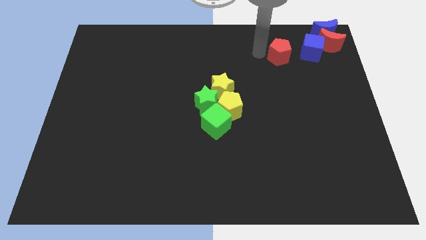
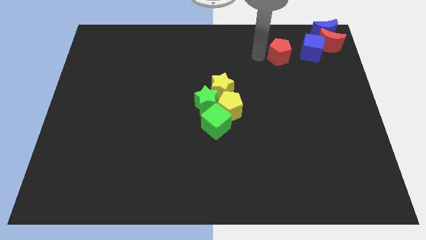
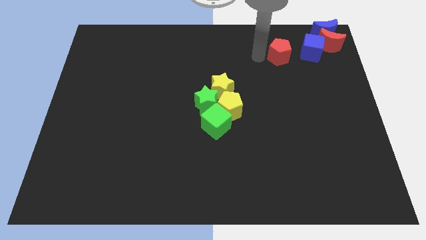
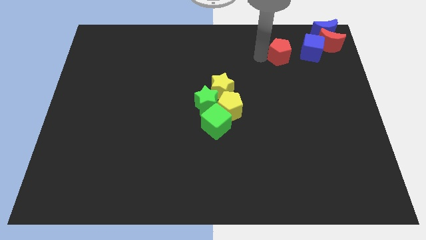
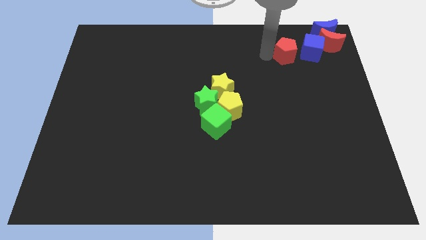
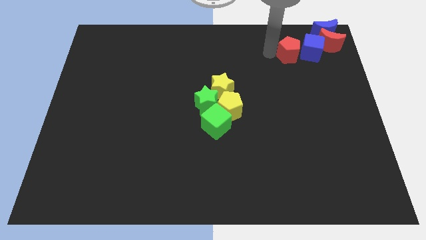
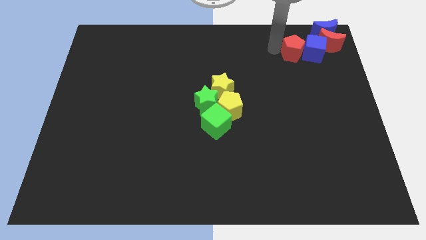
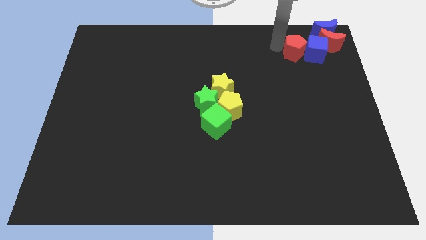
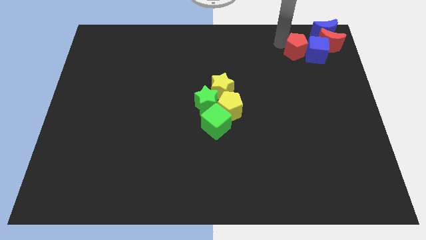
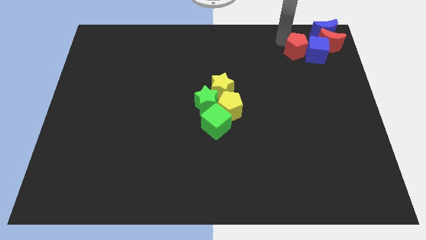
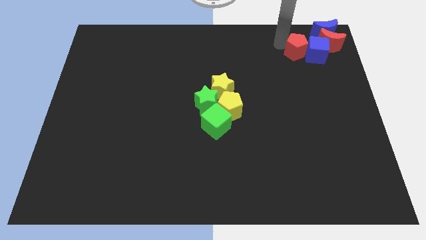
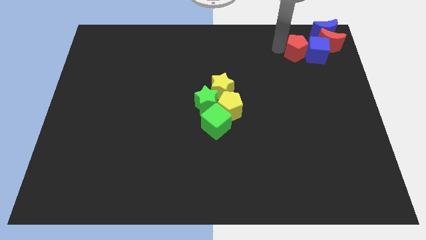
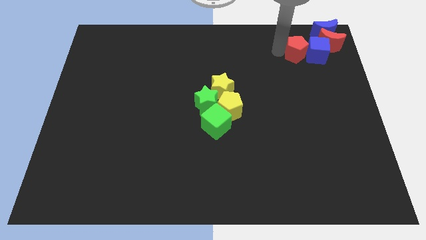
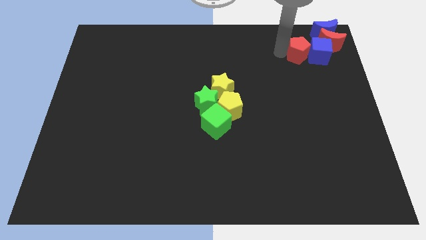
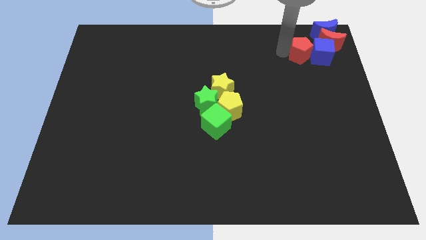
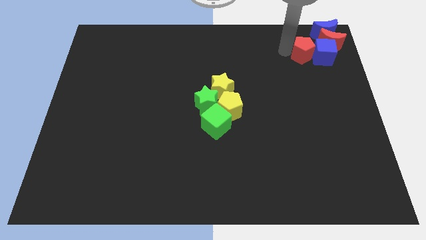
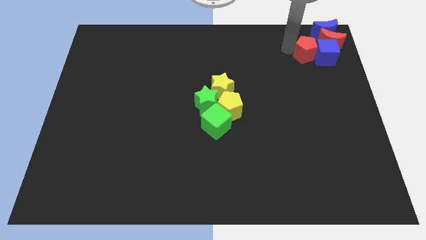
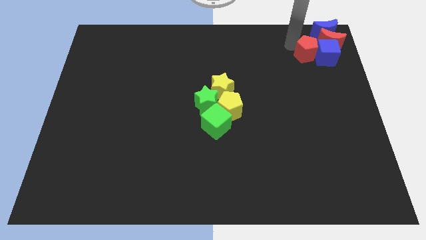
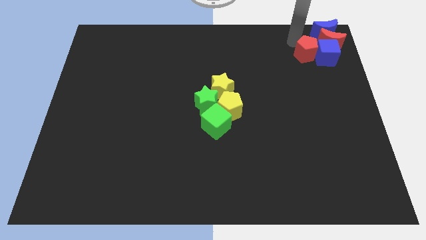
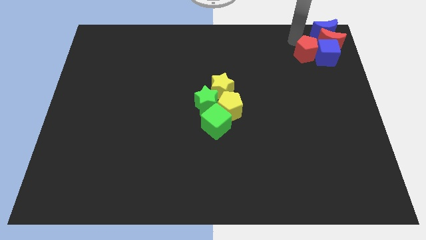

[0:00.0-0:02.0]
push the red pentagon into blue cube

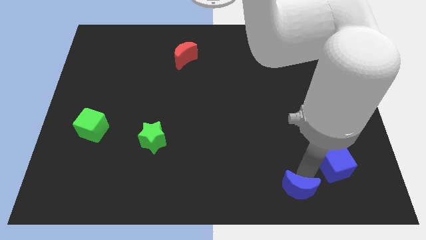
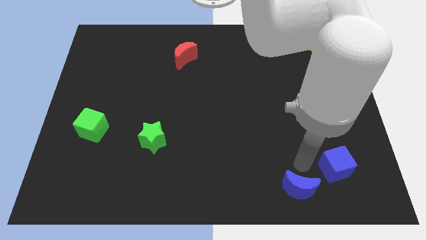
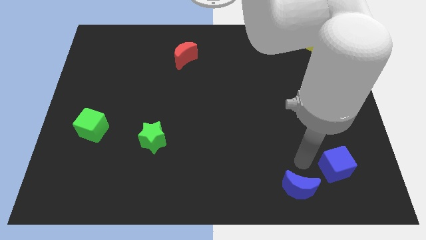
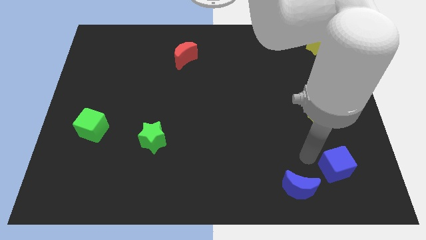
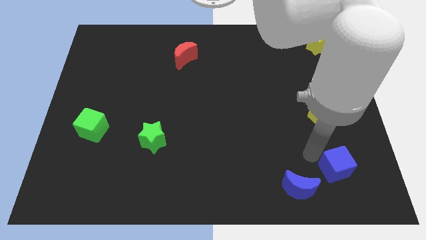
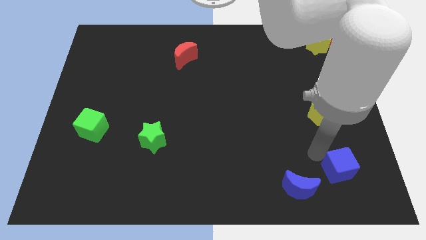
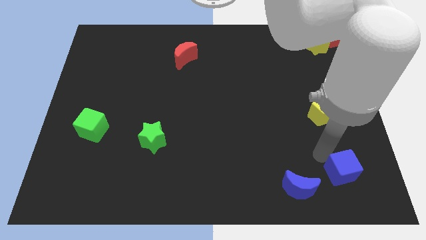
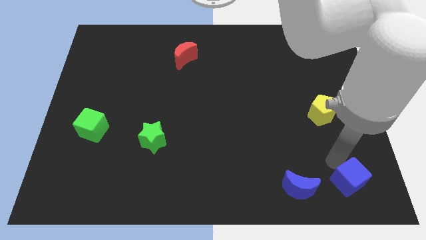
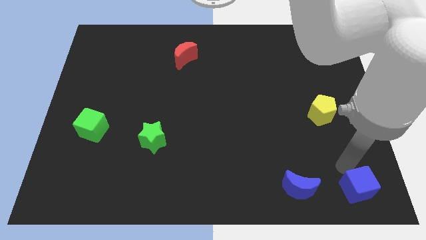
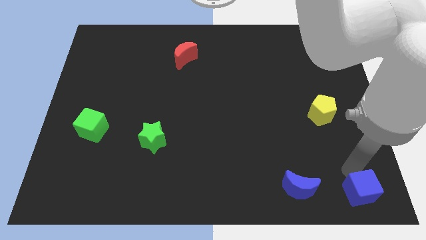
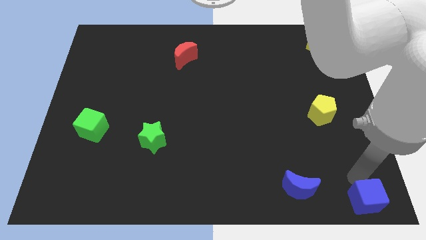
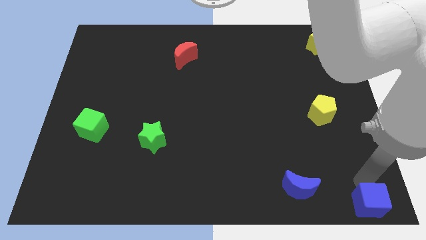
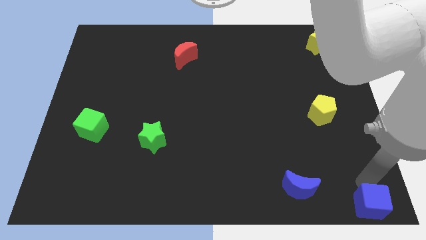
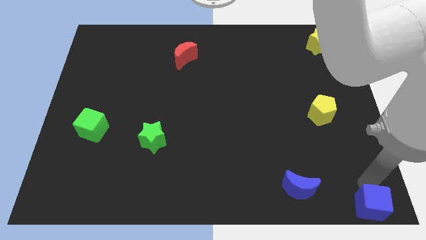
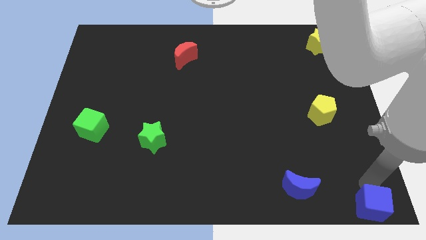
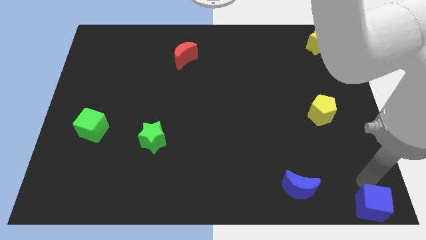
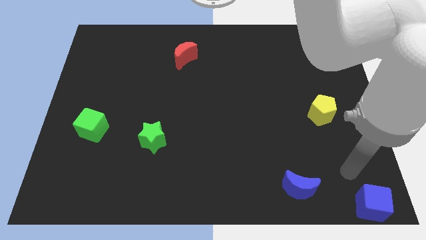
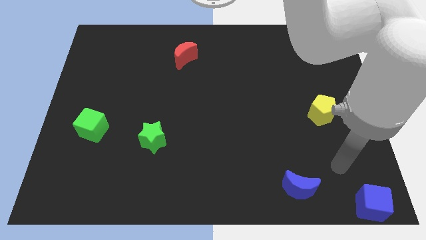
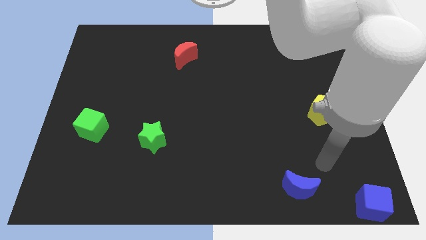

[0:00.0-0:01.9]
push the blue cube to the bottom right corner

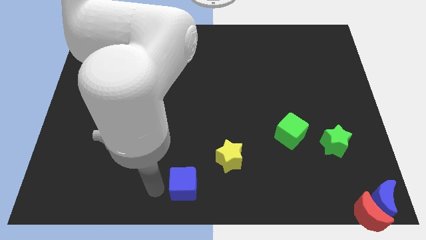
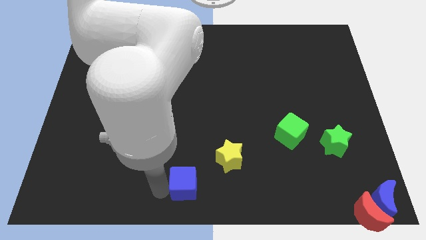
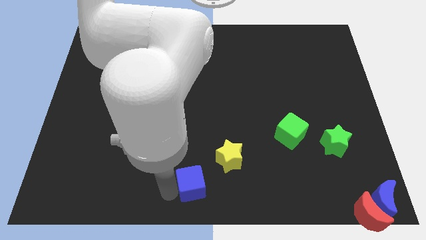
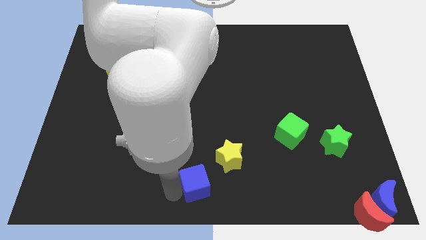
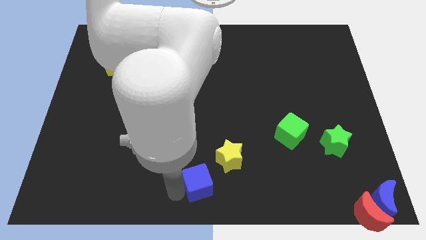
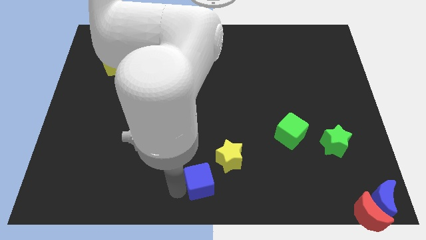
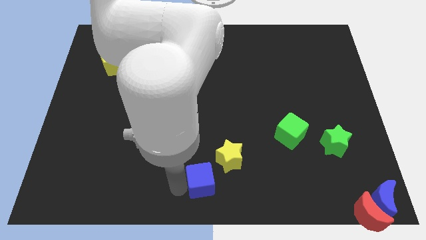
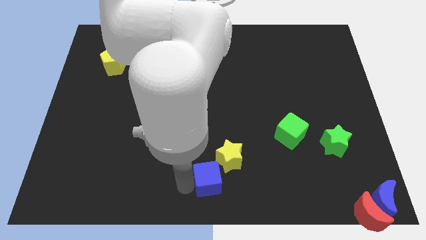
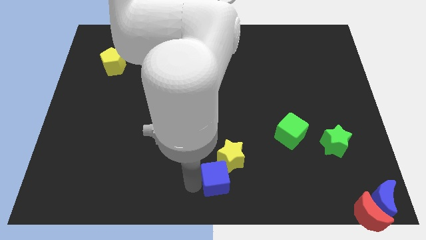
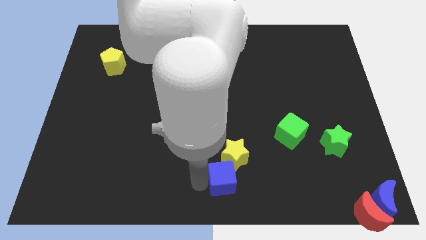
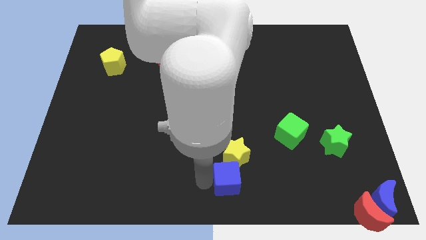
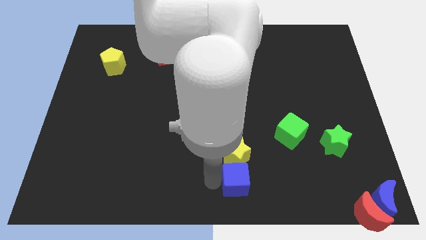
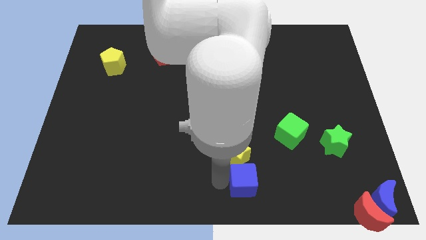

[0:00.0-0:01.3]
push the blue cube to the bottom of the yellow star

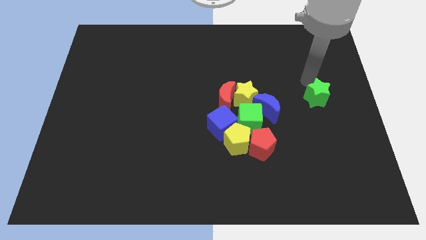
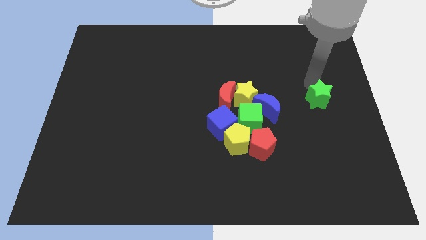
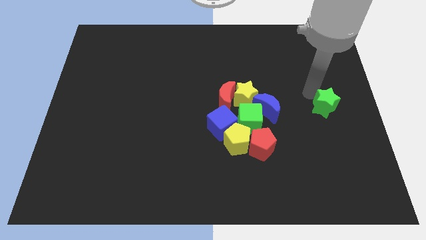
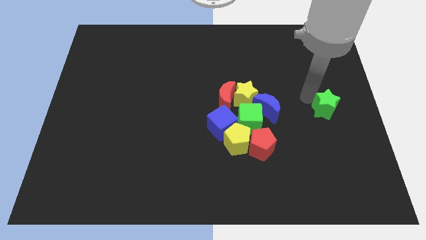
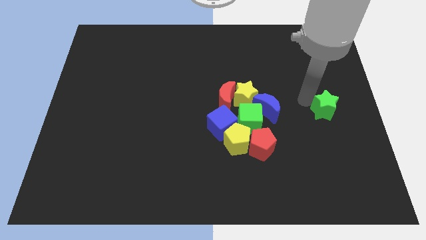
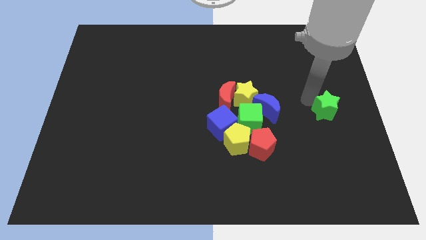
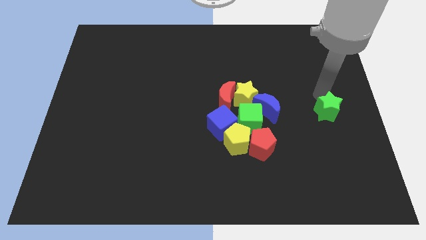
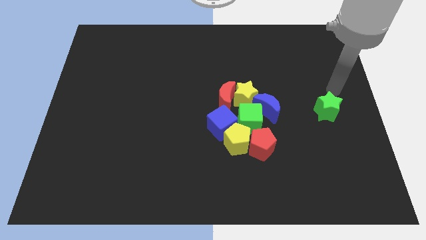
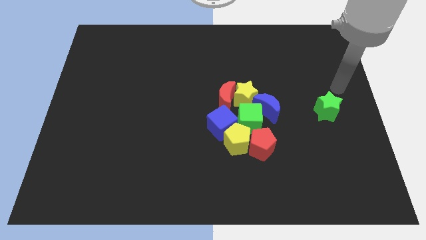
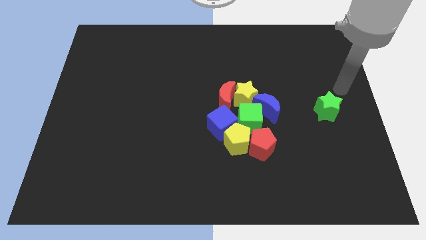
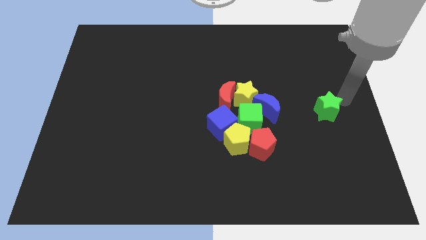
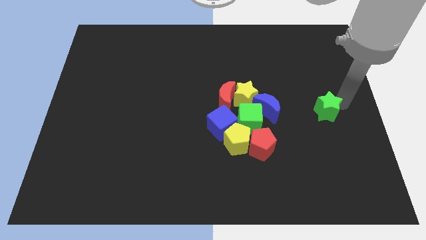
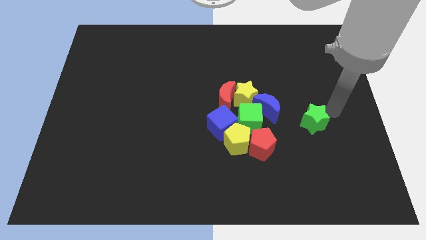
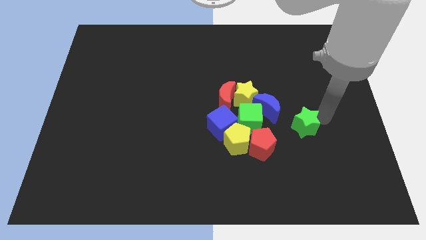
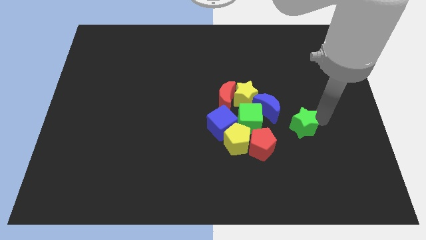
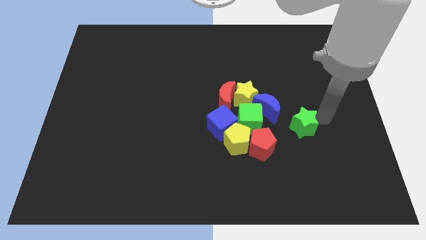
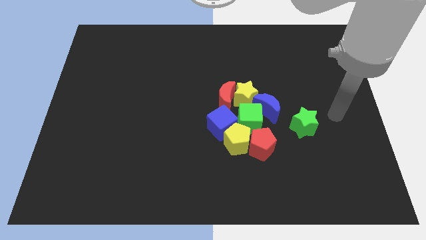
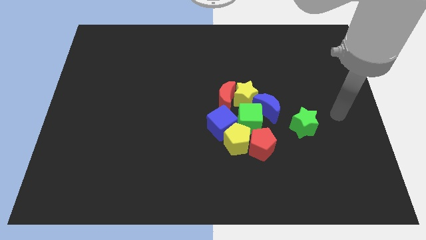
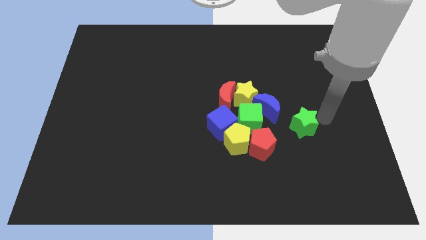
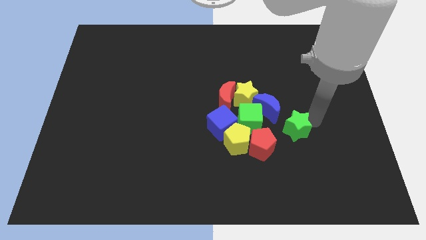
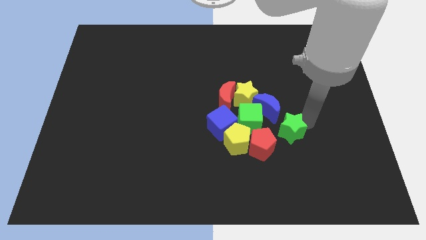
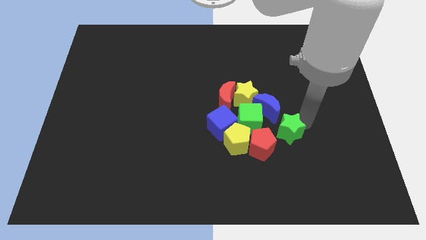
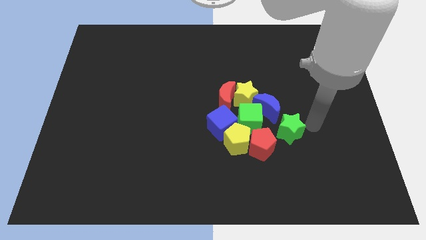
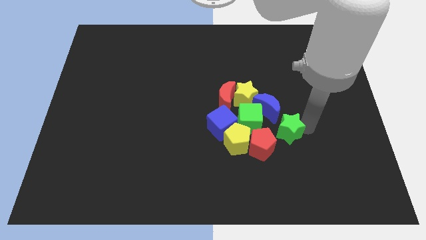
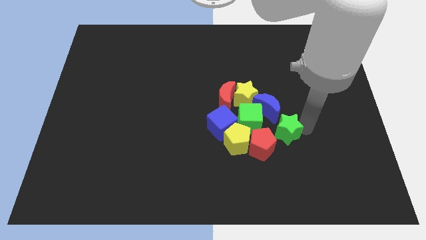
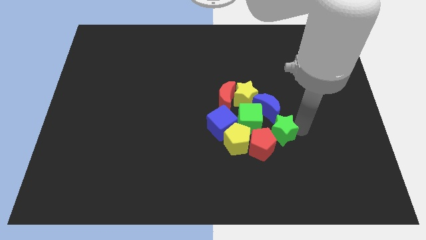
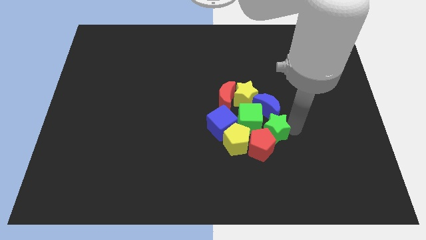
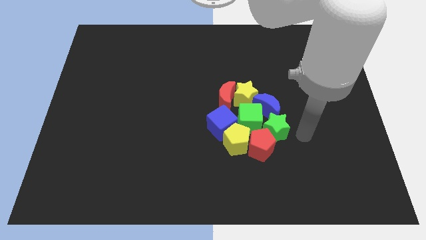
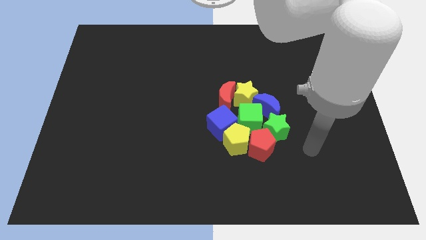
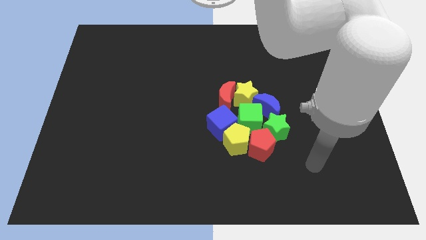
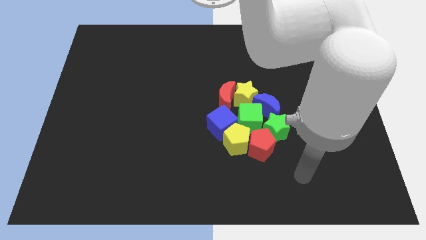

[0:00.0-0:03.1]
move the green star into the group of blocks

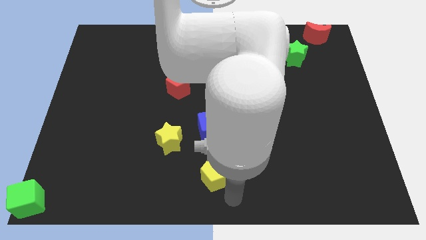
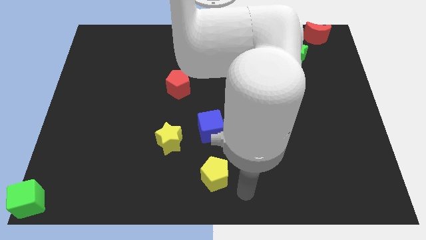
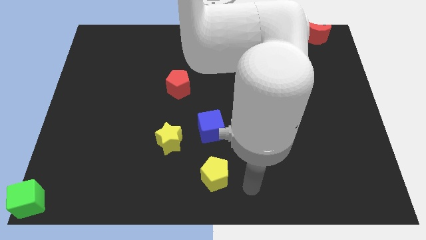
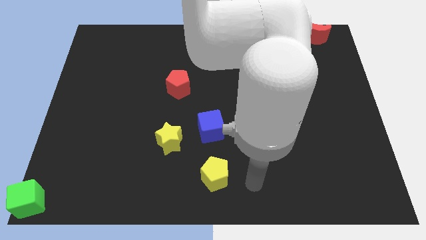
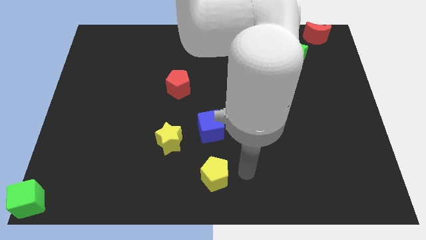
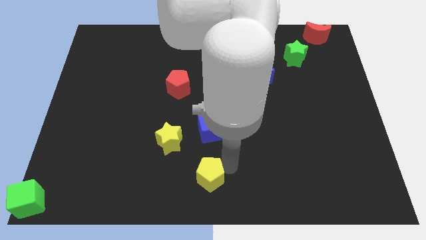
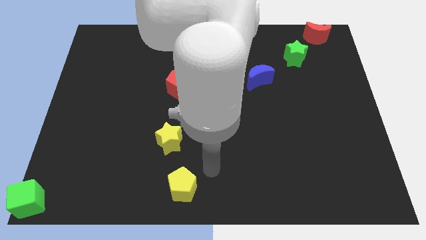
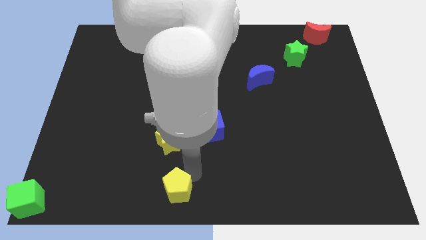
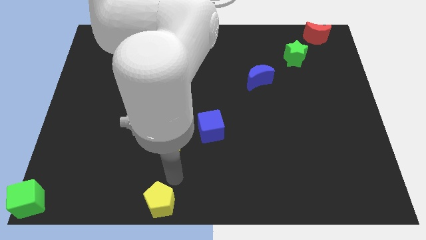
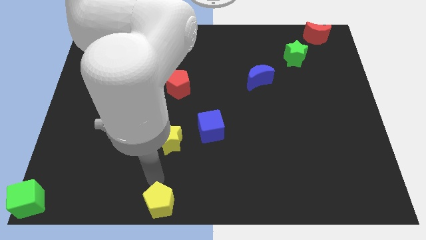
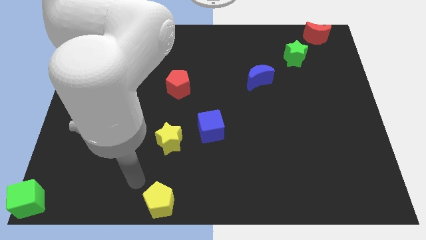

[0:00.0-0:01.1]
move yellow pentagon below the yellow star
